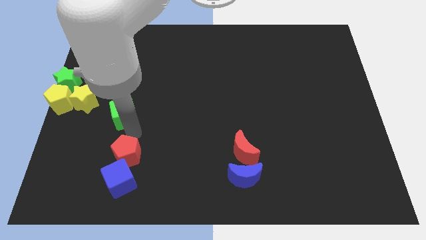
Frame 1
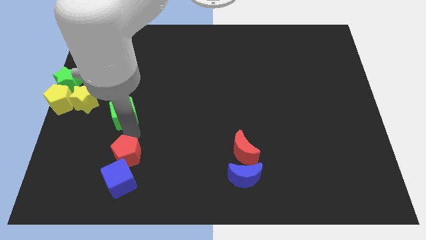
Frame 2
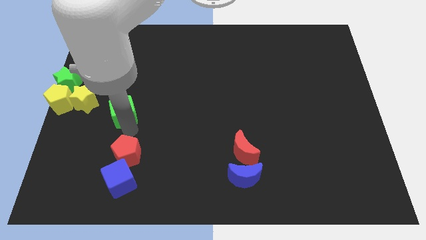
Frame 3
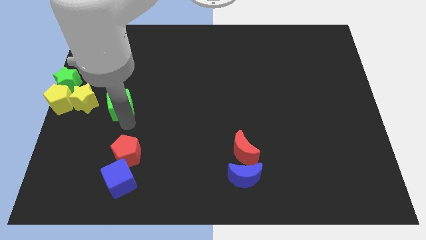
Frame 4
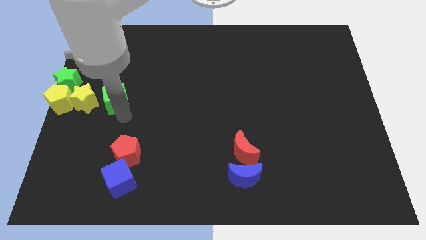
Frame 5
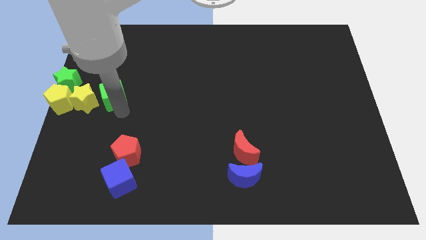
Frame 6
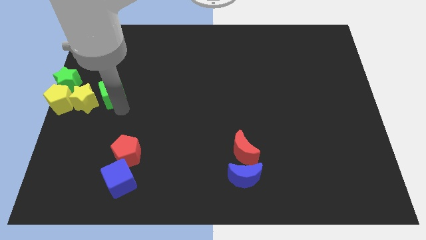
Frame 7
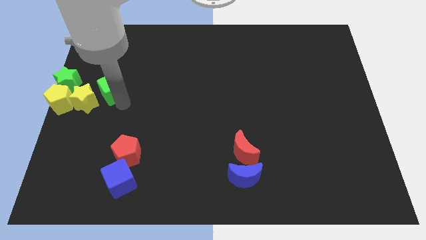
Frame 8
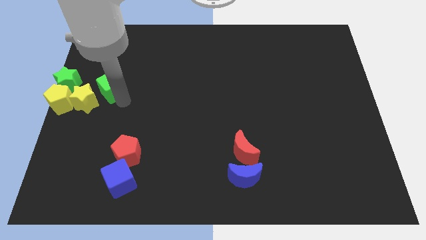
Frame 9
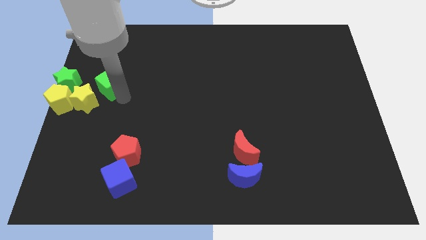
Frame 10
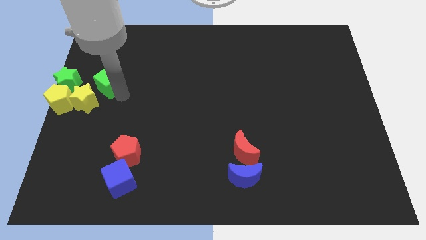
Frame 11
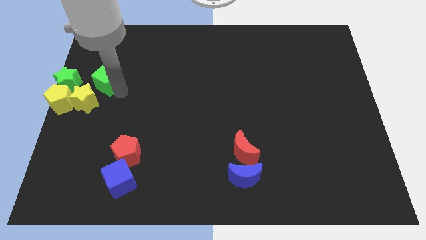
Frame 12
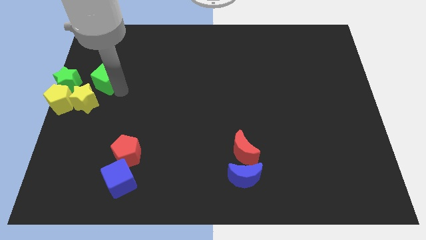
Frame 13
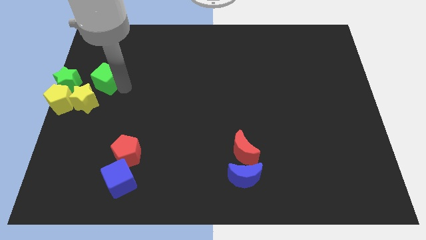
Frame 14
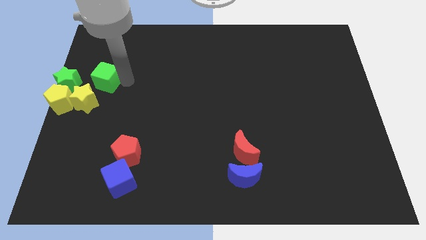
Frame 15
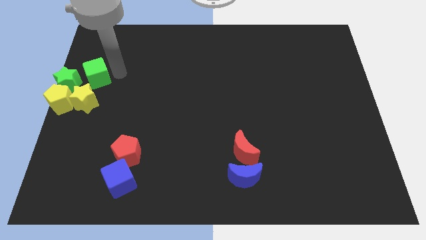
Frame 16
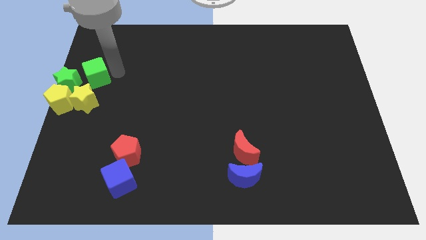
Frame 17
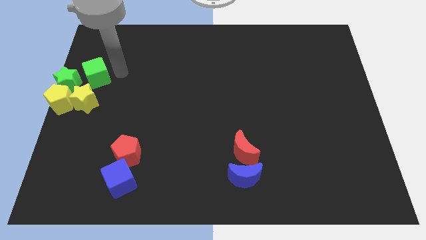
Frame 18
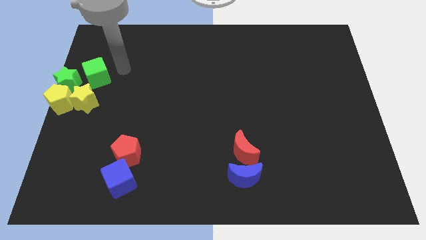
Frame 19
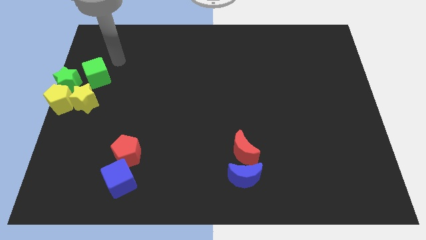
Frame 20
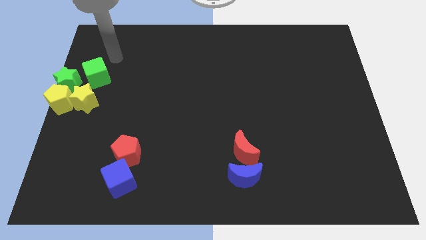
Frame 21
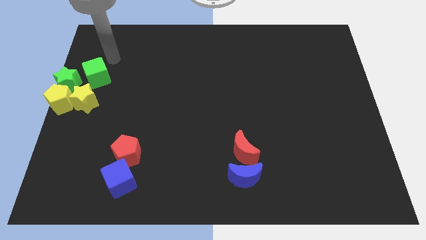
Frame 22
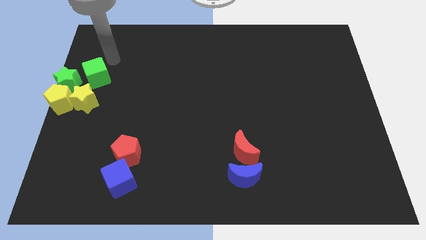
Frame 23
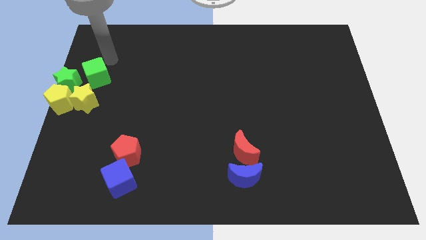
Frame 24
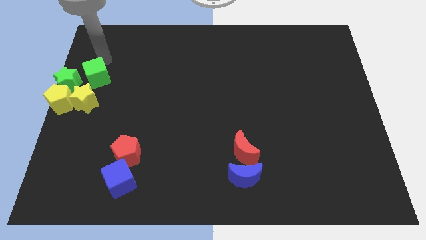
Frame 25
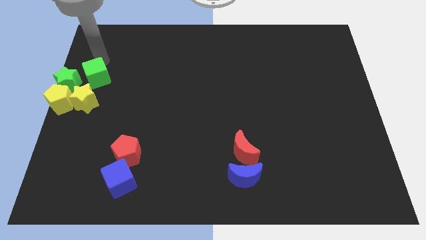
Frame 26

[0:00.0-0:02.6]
push green cube beside green star

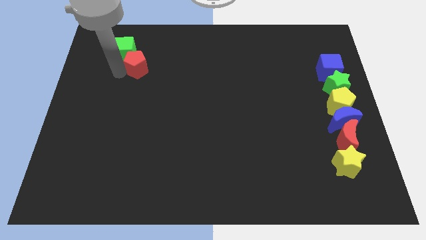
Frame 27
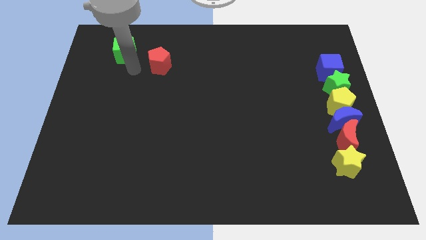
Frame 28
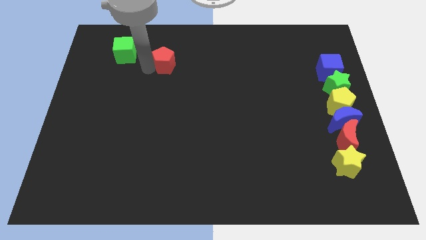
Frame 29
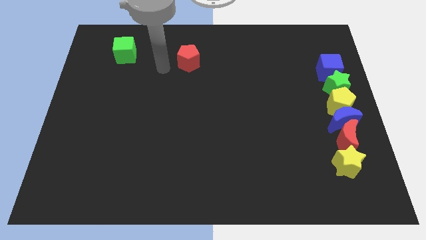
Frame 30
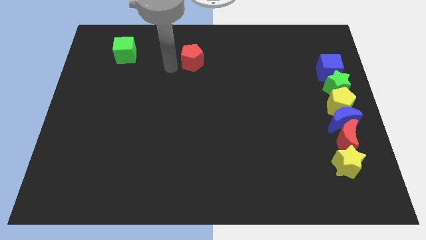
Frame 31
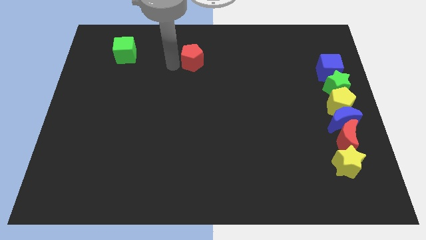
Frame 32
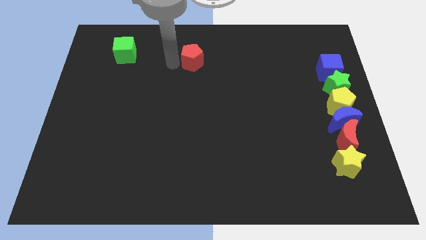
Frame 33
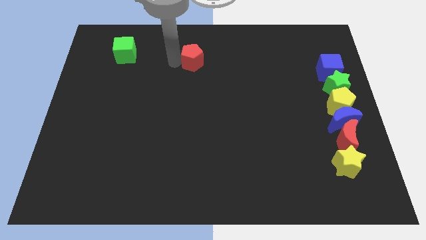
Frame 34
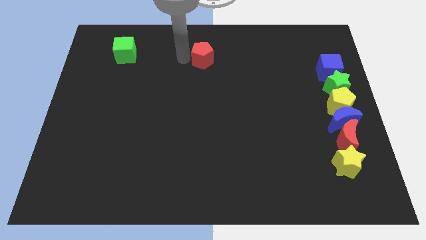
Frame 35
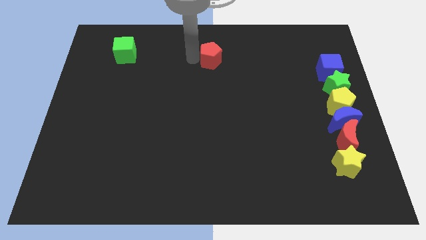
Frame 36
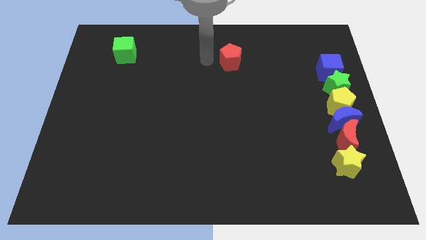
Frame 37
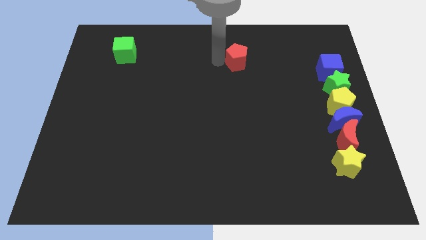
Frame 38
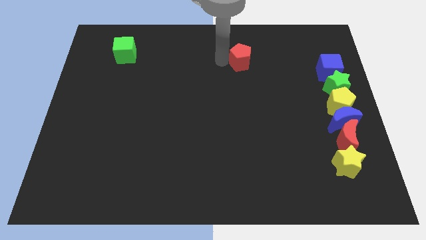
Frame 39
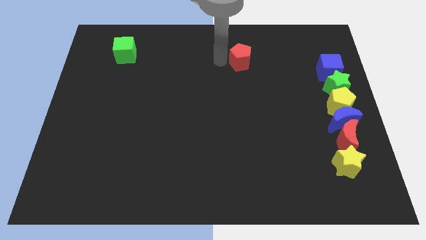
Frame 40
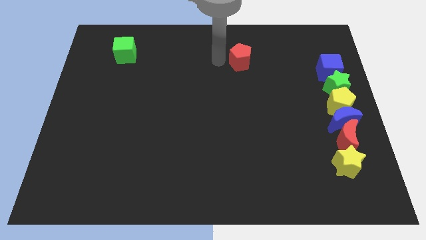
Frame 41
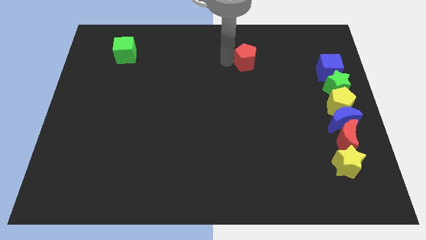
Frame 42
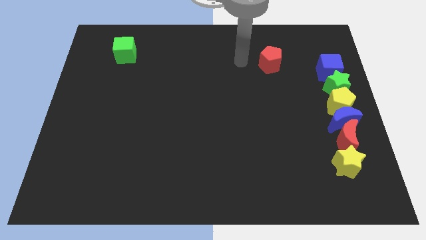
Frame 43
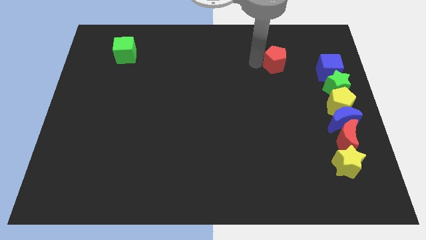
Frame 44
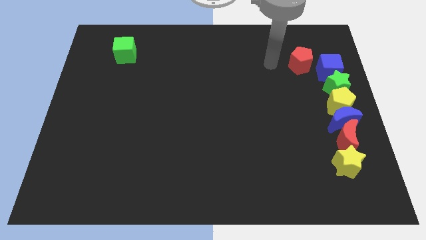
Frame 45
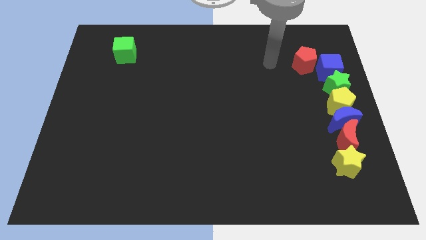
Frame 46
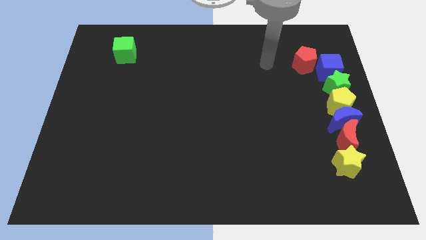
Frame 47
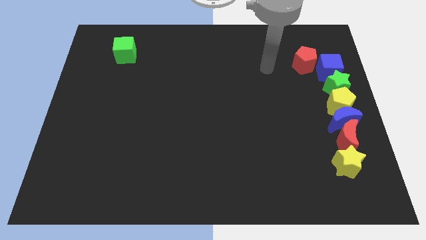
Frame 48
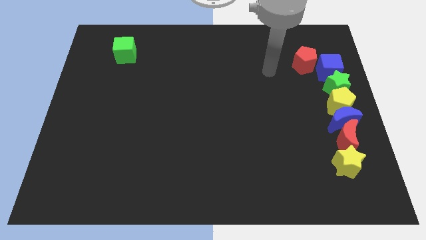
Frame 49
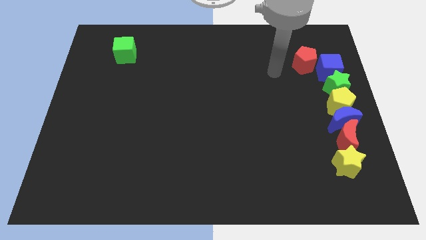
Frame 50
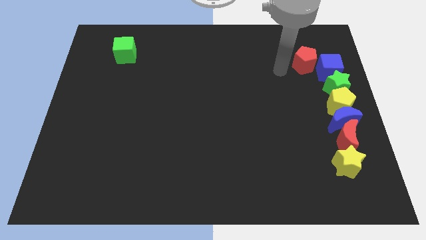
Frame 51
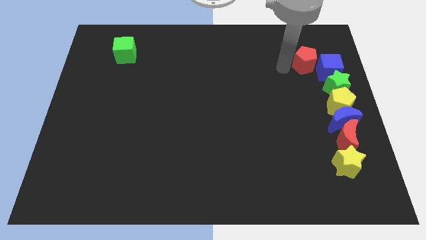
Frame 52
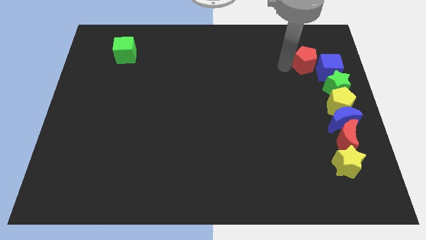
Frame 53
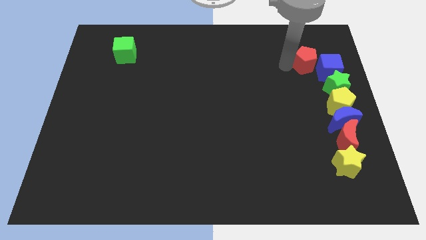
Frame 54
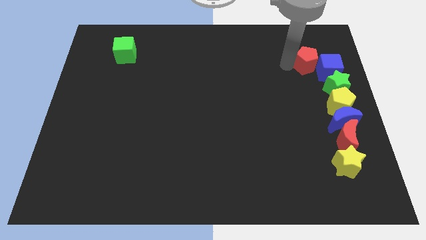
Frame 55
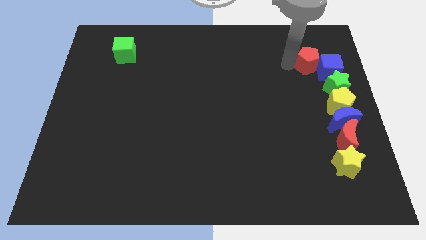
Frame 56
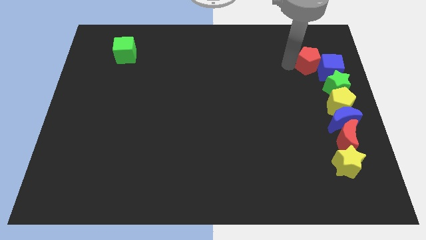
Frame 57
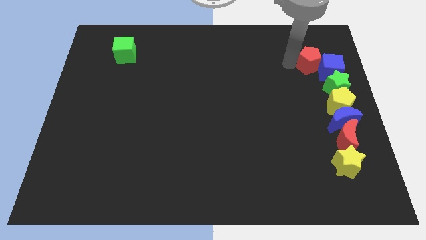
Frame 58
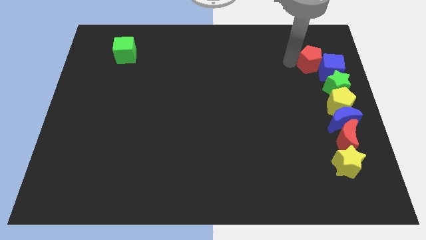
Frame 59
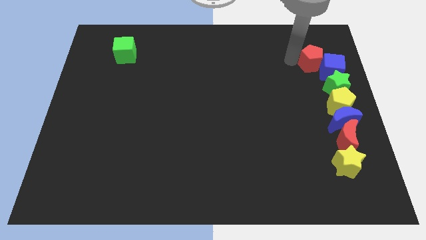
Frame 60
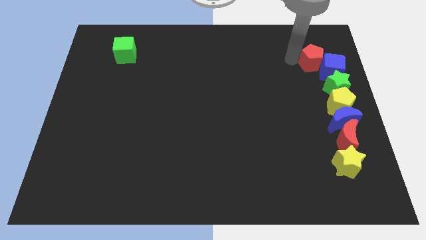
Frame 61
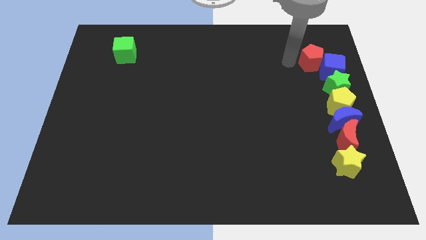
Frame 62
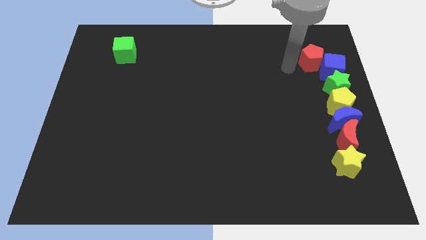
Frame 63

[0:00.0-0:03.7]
push the red pentagon into the blue cube

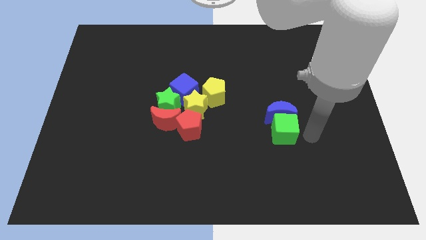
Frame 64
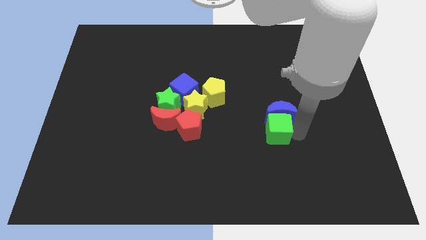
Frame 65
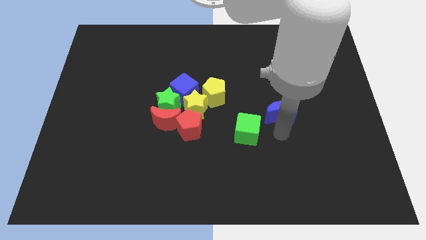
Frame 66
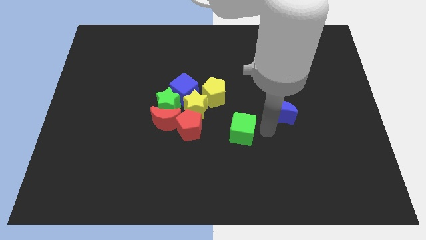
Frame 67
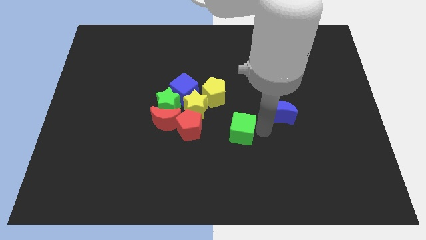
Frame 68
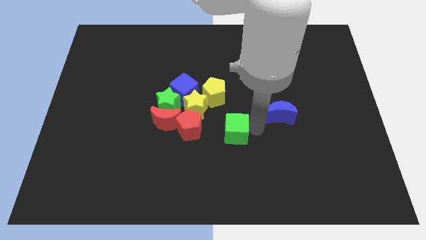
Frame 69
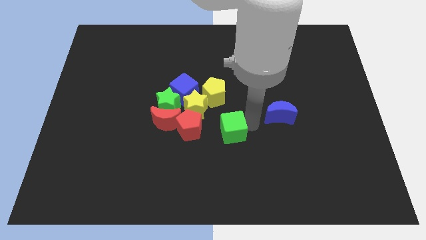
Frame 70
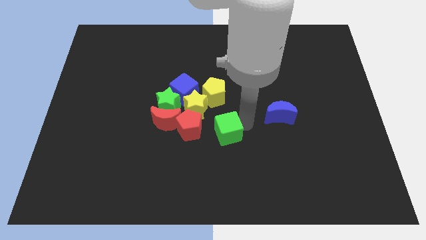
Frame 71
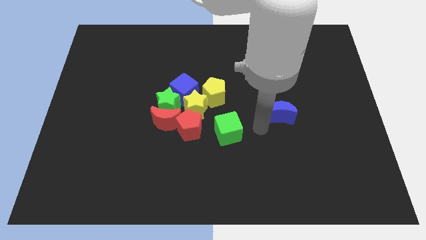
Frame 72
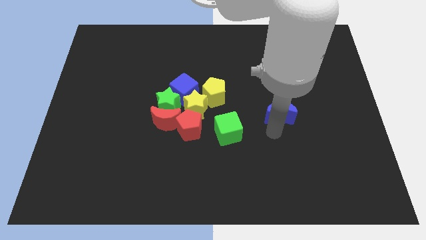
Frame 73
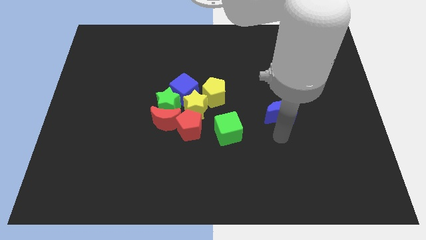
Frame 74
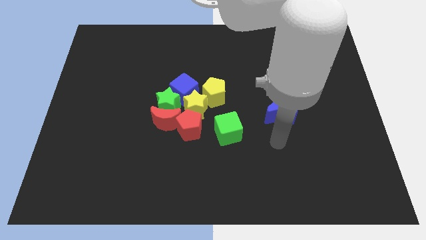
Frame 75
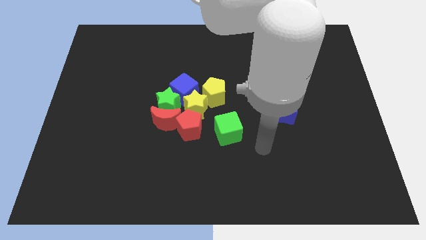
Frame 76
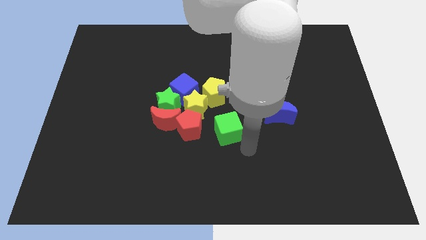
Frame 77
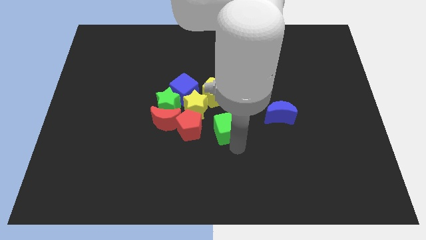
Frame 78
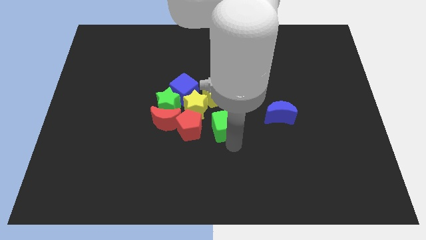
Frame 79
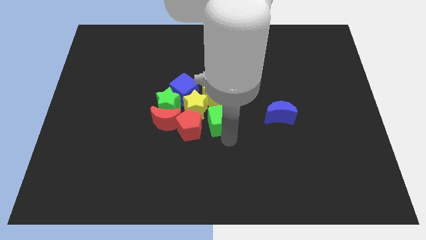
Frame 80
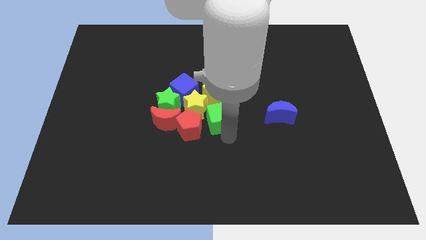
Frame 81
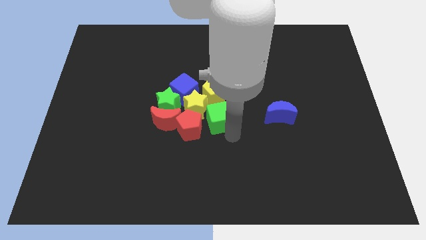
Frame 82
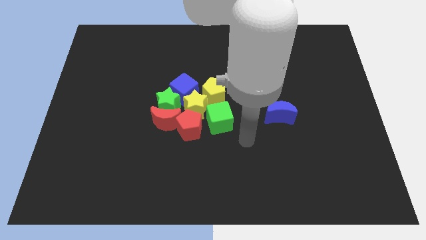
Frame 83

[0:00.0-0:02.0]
push green cube into group of blocks

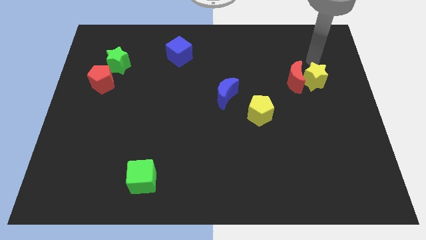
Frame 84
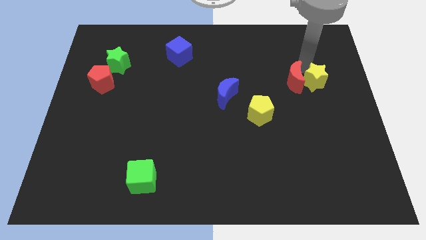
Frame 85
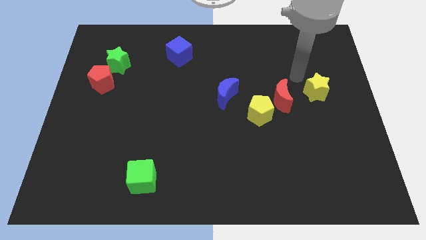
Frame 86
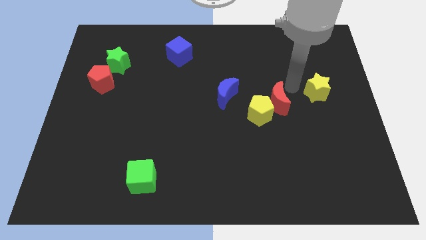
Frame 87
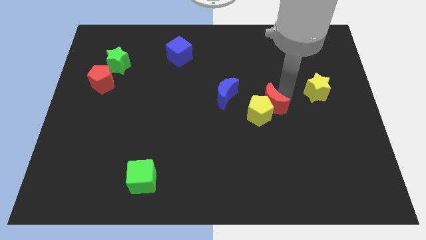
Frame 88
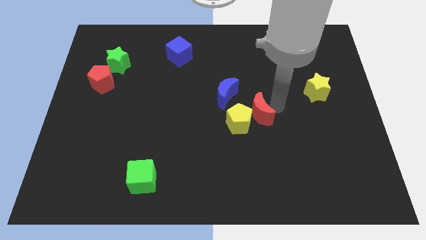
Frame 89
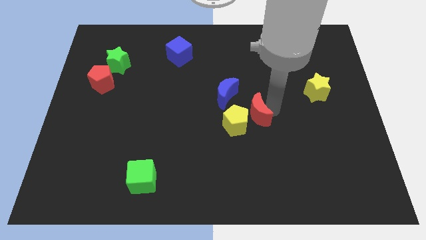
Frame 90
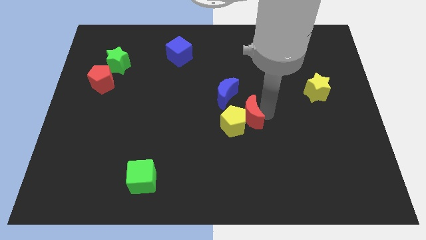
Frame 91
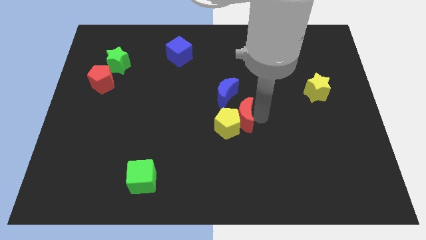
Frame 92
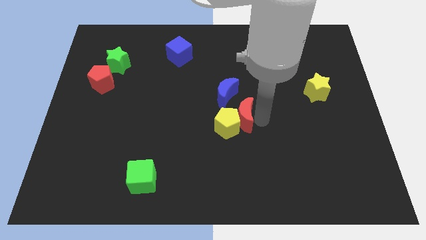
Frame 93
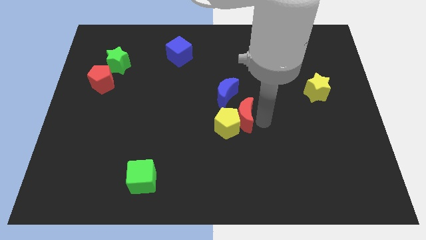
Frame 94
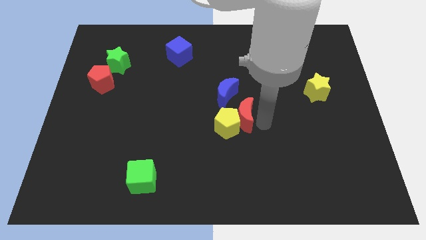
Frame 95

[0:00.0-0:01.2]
move red crescent into the yellow pentagon
